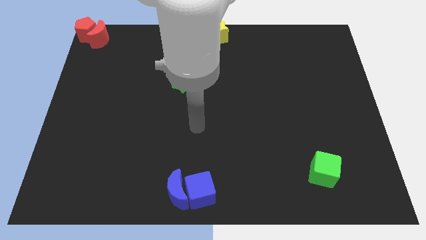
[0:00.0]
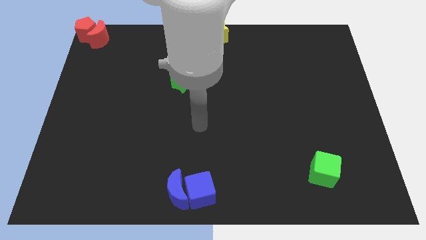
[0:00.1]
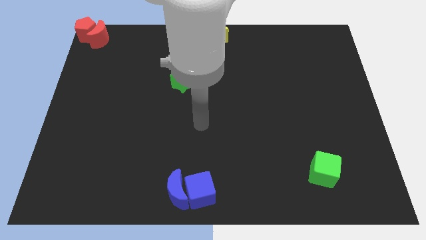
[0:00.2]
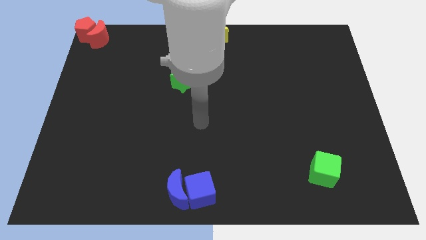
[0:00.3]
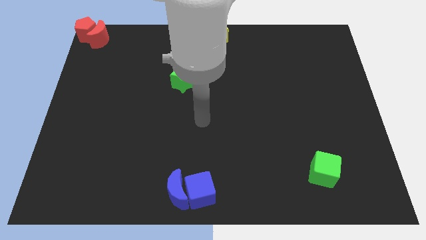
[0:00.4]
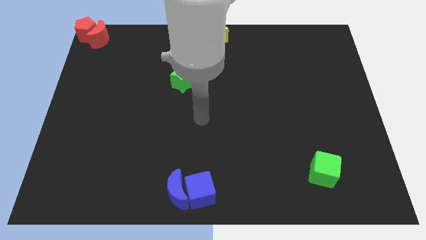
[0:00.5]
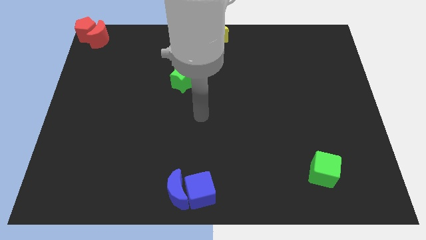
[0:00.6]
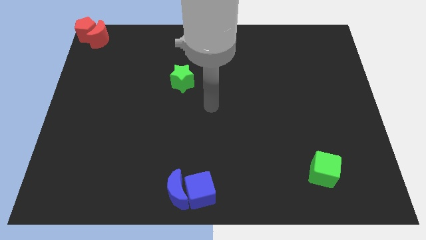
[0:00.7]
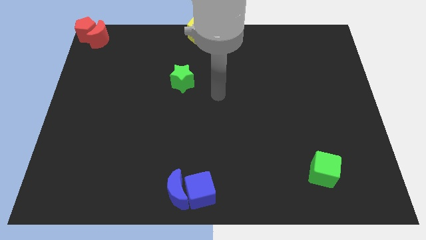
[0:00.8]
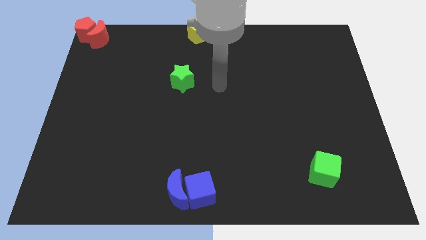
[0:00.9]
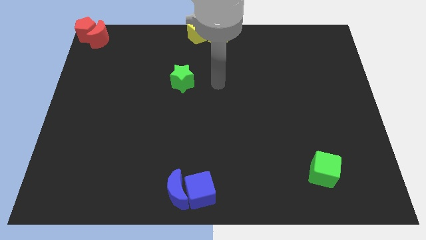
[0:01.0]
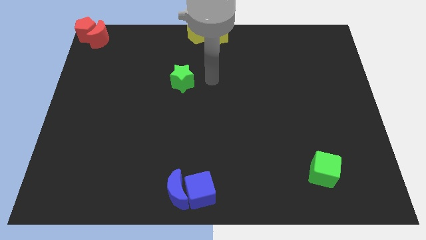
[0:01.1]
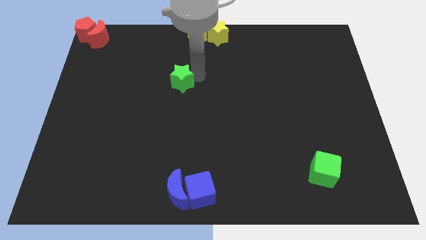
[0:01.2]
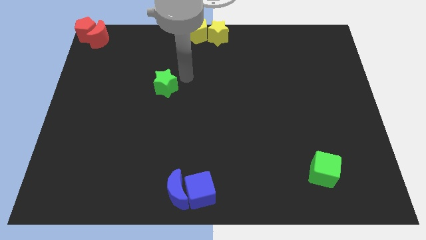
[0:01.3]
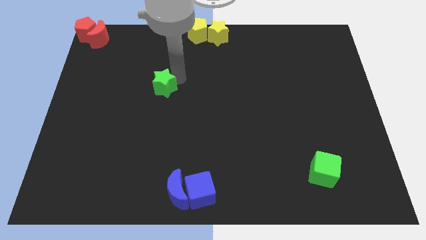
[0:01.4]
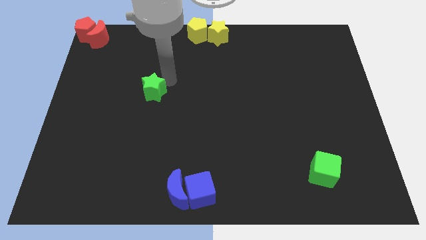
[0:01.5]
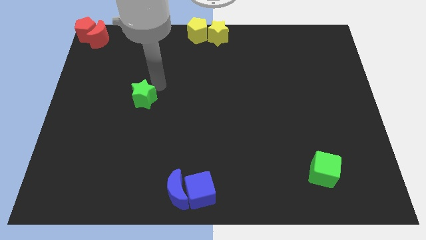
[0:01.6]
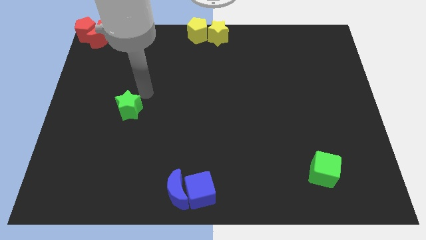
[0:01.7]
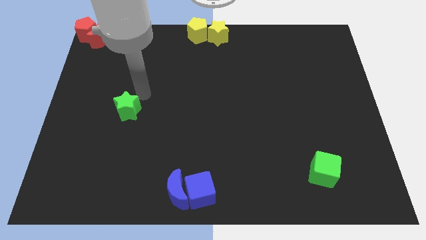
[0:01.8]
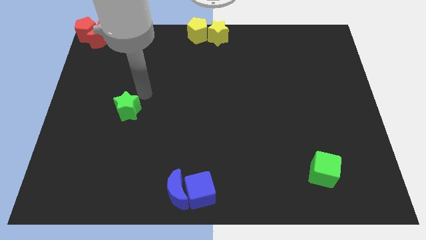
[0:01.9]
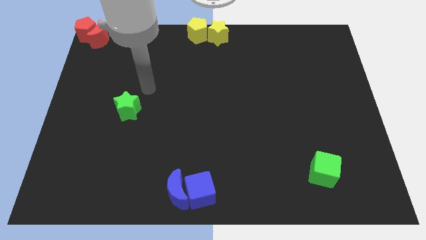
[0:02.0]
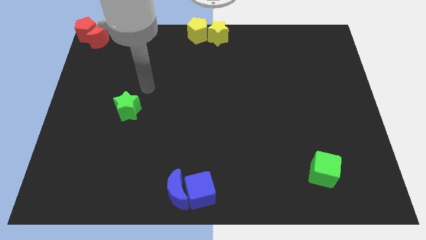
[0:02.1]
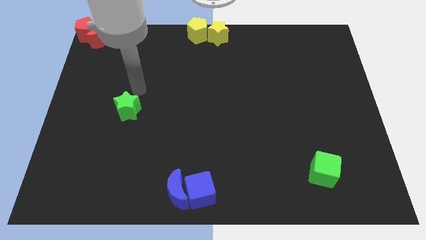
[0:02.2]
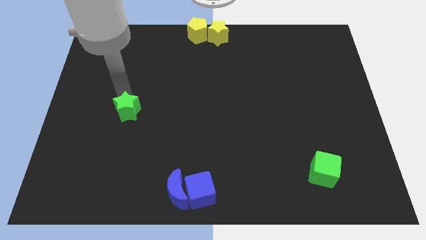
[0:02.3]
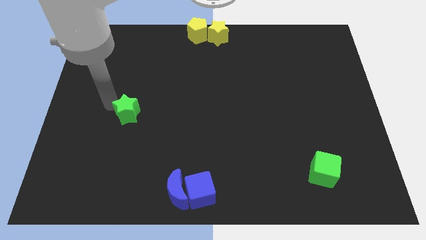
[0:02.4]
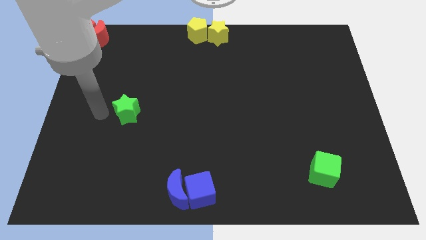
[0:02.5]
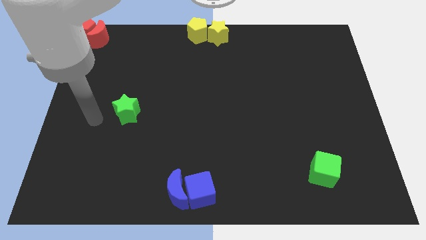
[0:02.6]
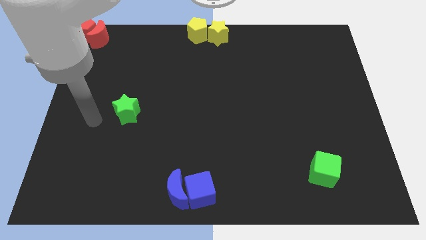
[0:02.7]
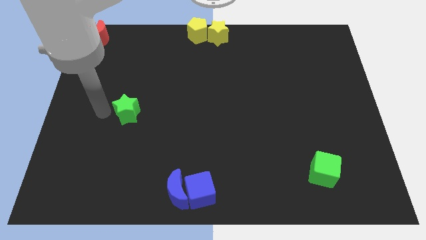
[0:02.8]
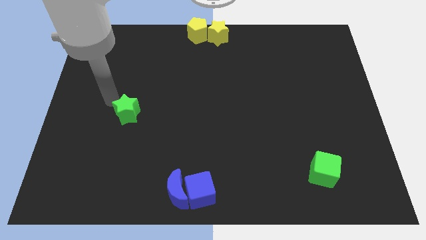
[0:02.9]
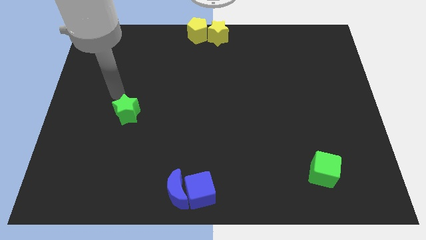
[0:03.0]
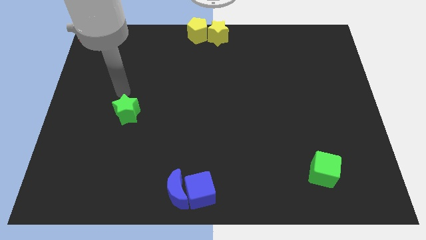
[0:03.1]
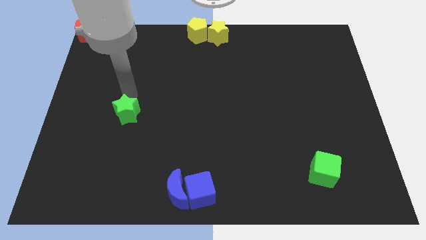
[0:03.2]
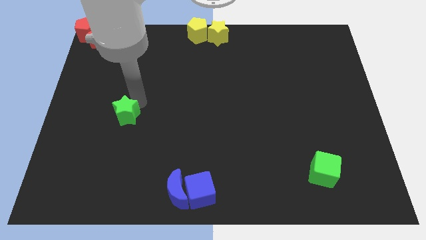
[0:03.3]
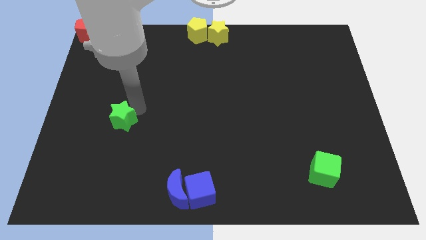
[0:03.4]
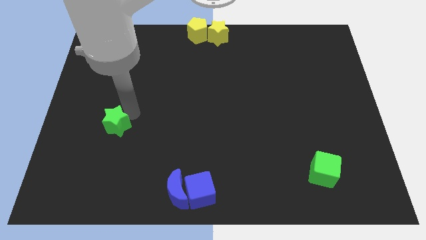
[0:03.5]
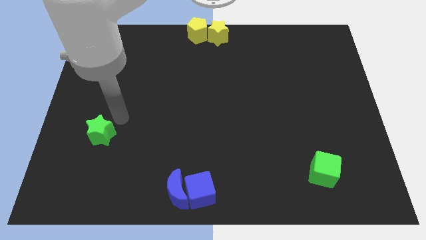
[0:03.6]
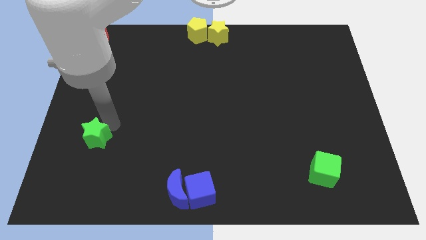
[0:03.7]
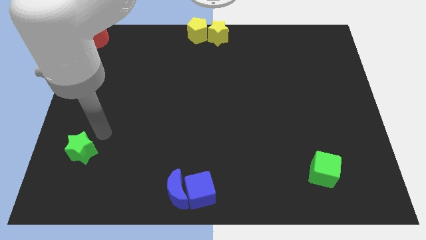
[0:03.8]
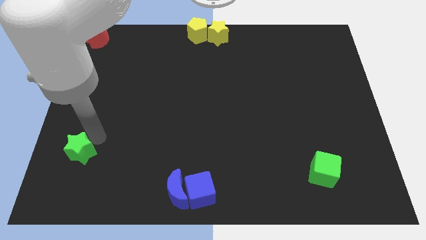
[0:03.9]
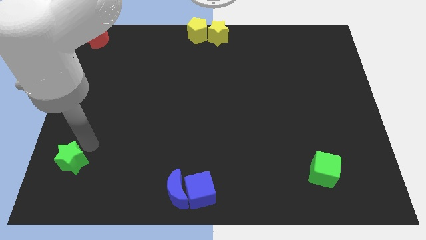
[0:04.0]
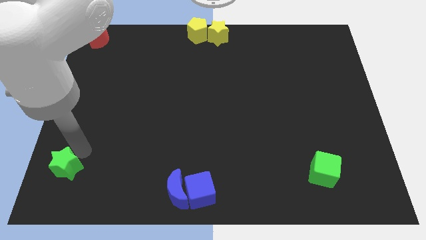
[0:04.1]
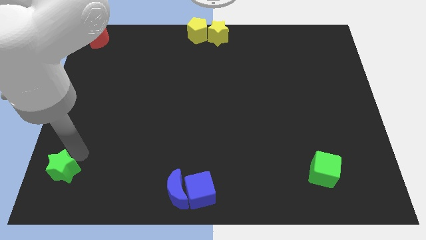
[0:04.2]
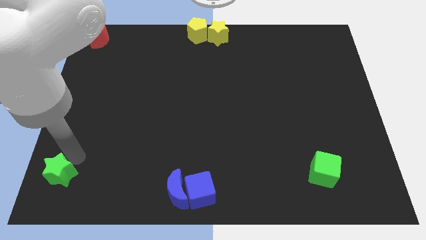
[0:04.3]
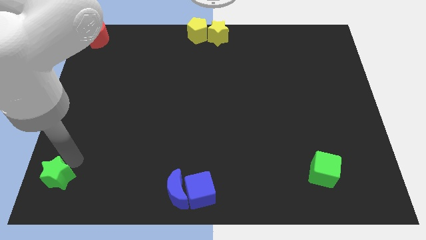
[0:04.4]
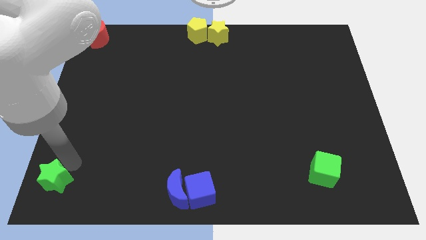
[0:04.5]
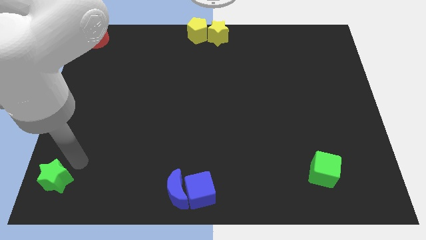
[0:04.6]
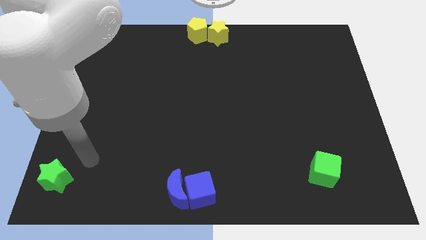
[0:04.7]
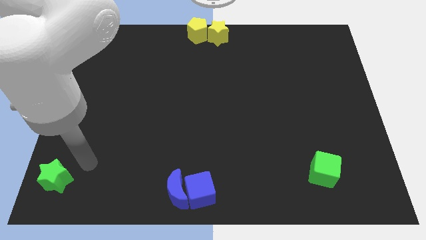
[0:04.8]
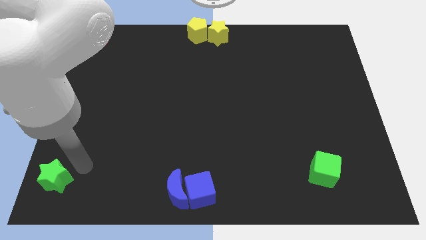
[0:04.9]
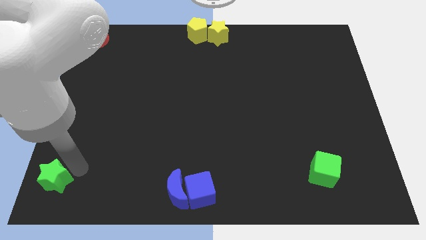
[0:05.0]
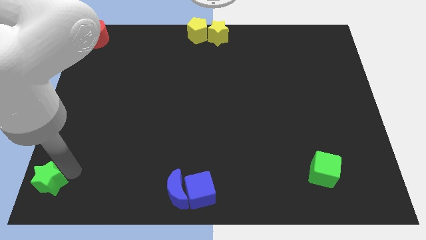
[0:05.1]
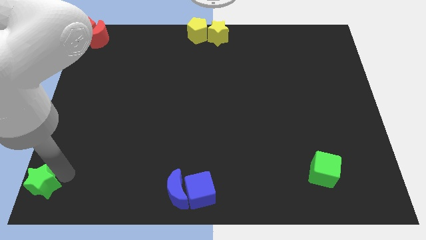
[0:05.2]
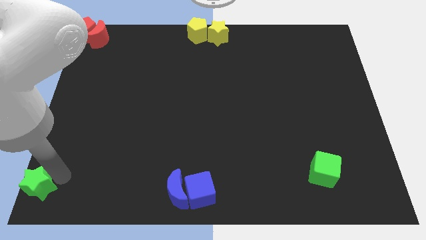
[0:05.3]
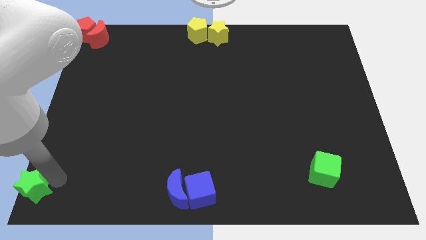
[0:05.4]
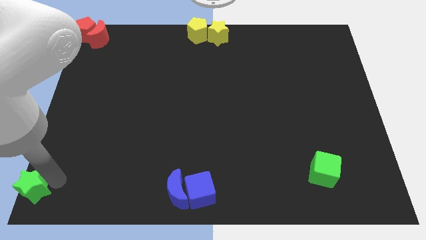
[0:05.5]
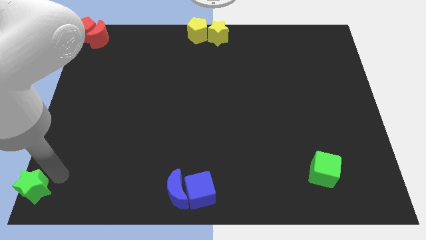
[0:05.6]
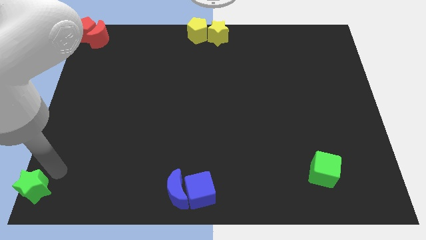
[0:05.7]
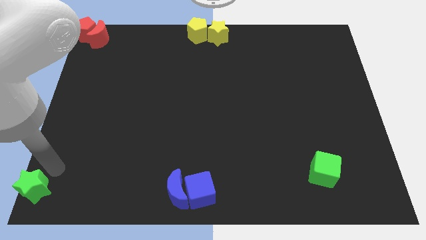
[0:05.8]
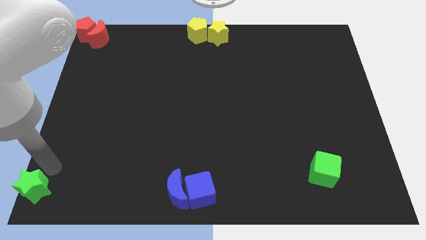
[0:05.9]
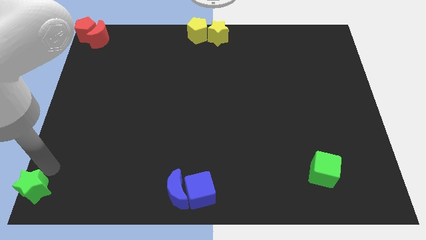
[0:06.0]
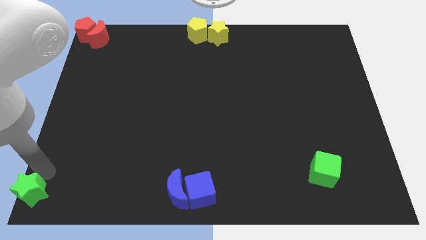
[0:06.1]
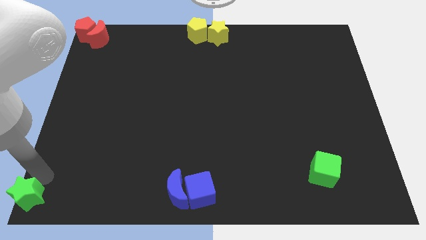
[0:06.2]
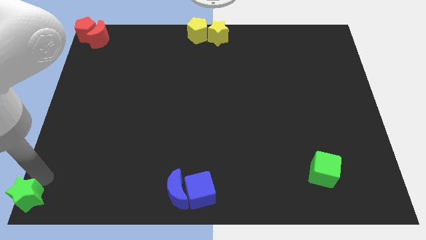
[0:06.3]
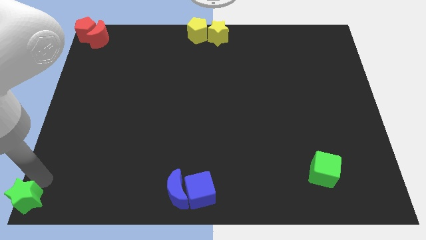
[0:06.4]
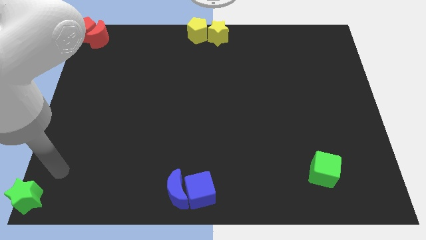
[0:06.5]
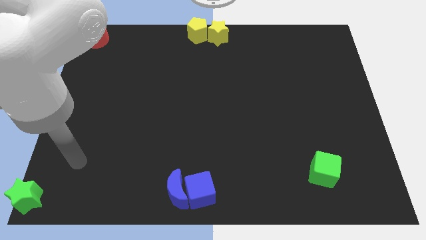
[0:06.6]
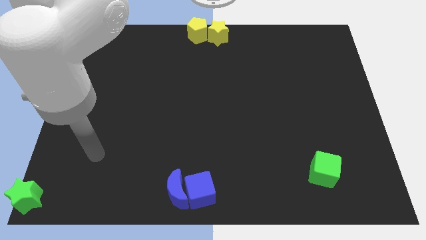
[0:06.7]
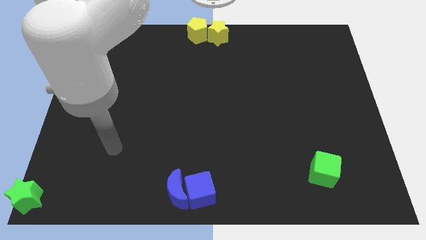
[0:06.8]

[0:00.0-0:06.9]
move the green star to the bottom left corner of the board

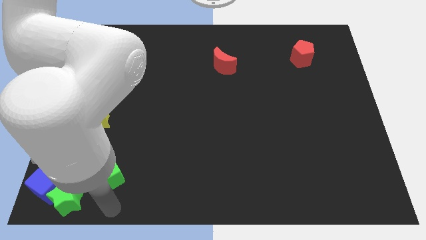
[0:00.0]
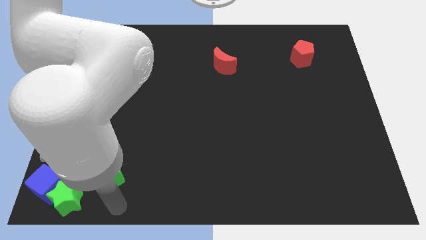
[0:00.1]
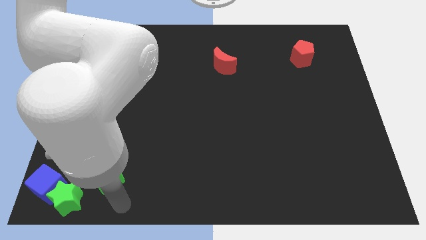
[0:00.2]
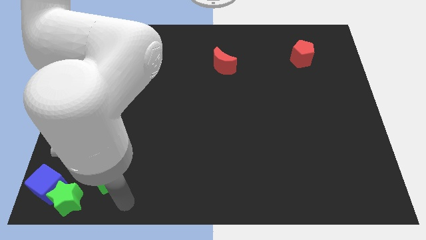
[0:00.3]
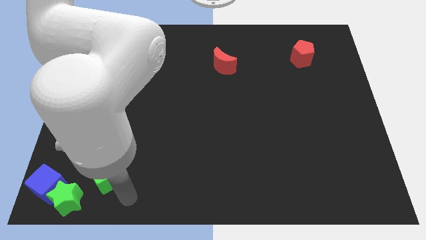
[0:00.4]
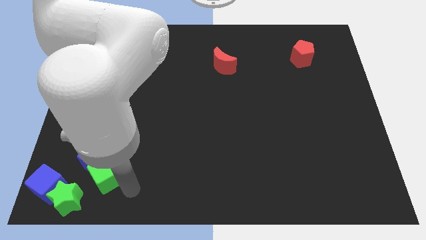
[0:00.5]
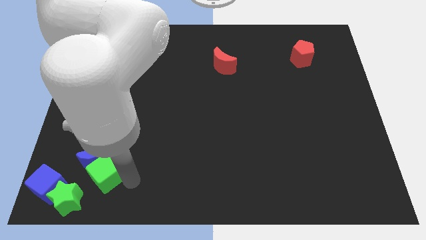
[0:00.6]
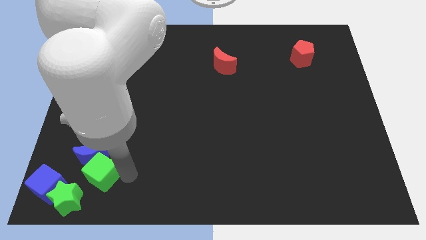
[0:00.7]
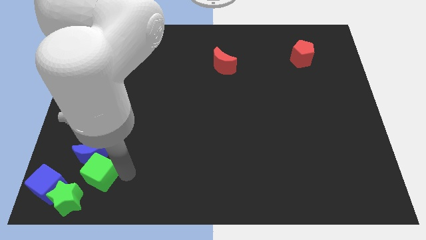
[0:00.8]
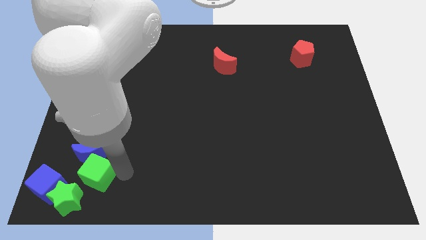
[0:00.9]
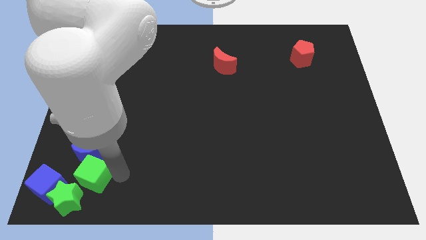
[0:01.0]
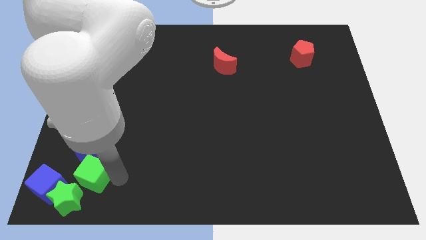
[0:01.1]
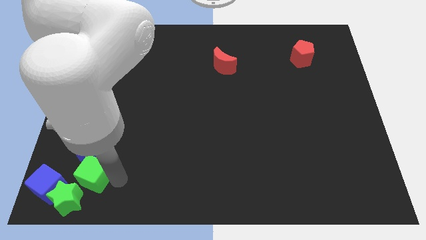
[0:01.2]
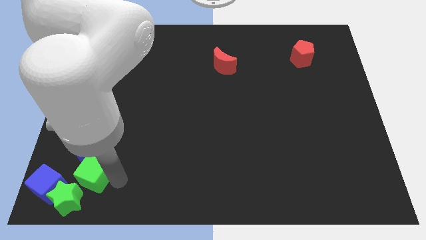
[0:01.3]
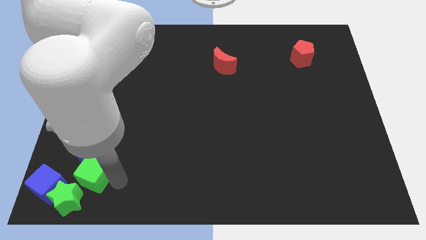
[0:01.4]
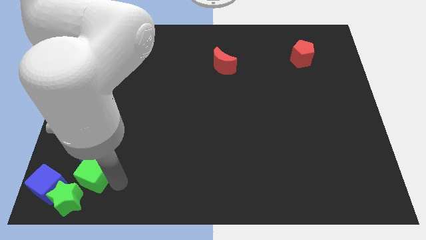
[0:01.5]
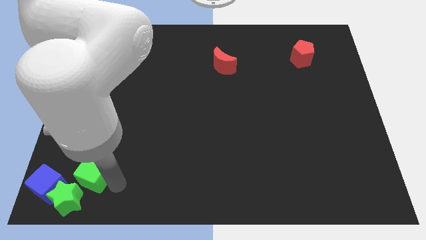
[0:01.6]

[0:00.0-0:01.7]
move green cube right above the green star

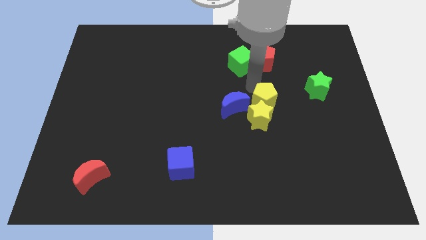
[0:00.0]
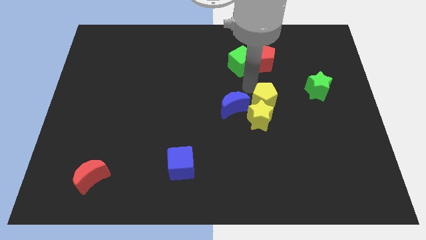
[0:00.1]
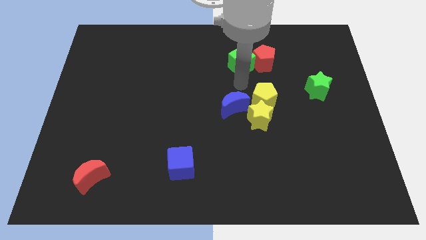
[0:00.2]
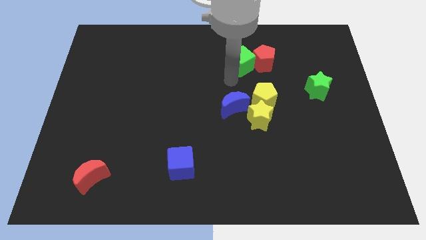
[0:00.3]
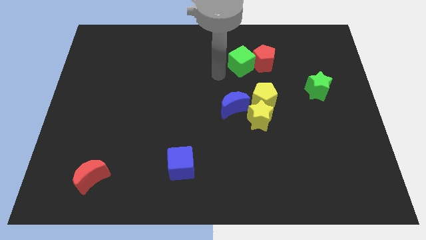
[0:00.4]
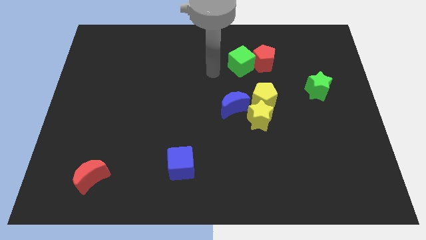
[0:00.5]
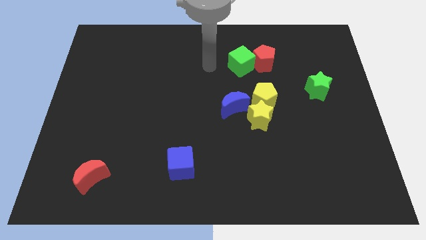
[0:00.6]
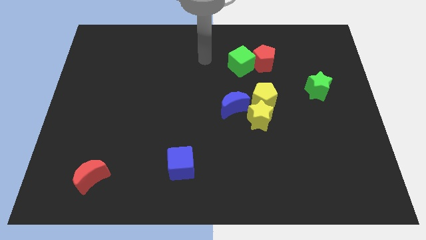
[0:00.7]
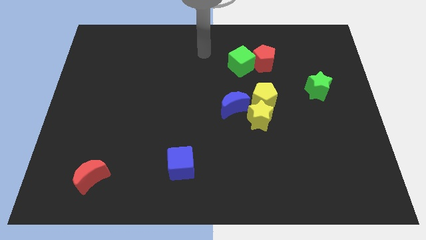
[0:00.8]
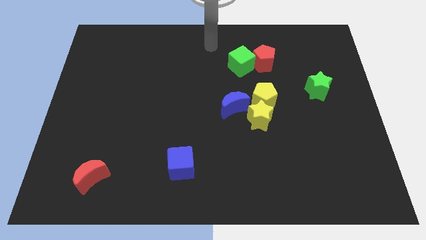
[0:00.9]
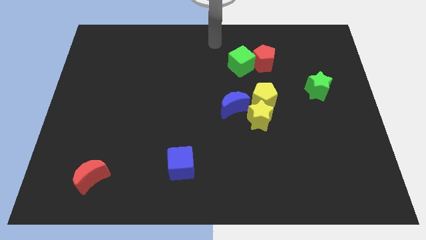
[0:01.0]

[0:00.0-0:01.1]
move arm away from yellow pentagon
